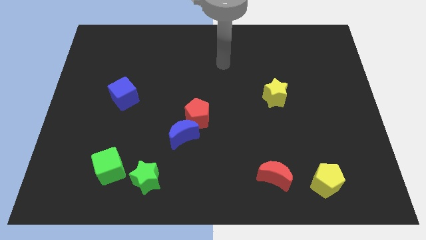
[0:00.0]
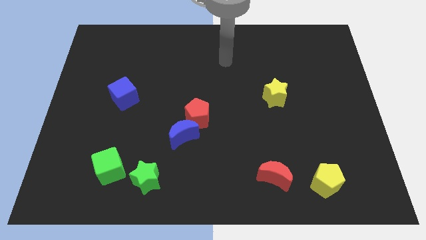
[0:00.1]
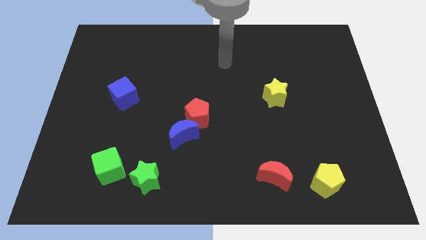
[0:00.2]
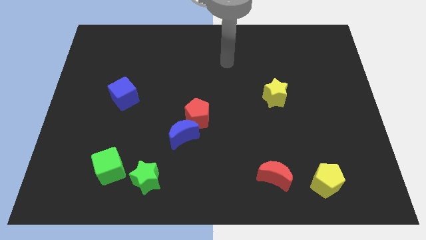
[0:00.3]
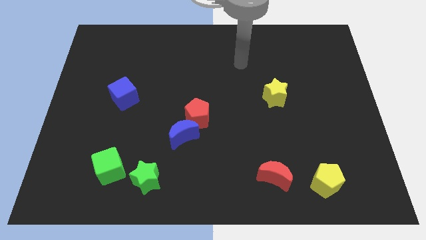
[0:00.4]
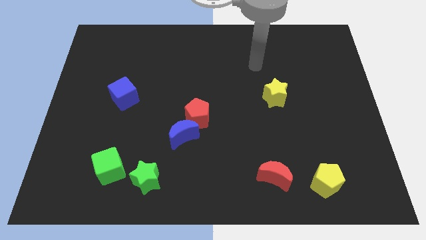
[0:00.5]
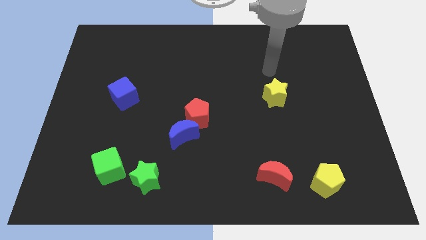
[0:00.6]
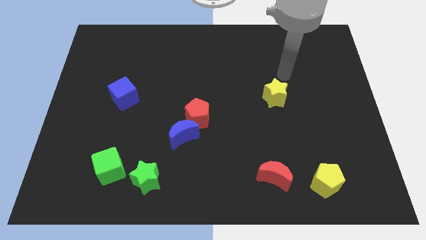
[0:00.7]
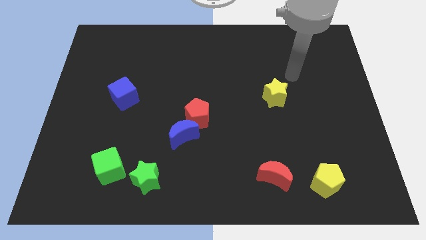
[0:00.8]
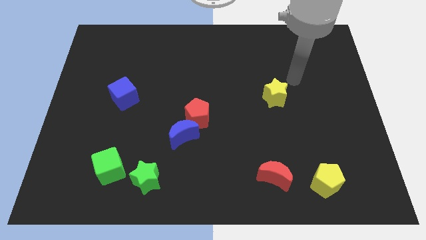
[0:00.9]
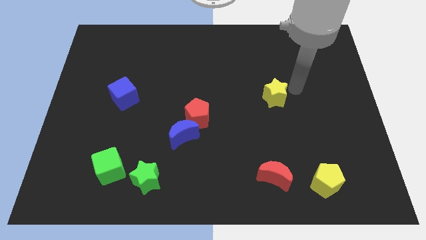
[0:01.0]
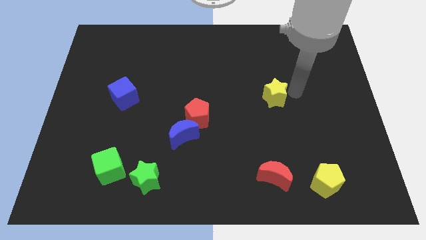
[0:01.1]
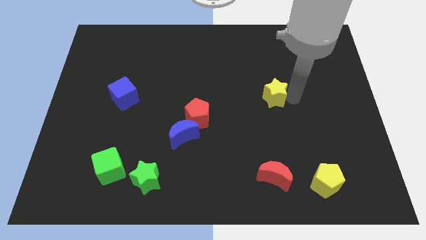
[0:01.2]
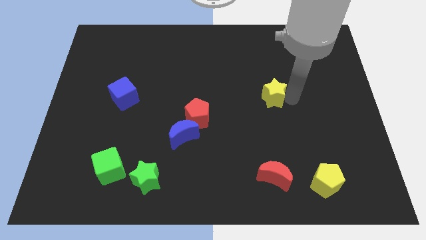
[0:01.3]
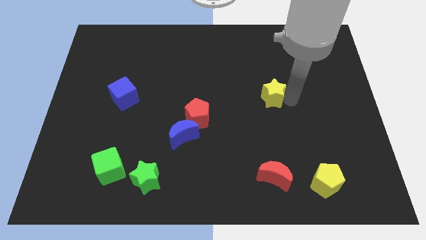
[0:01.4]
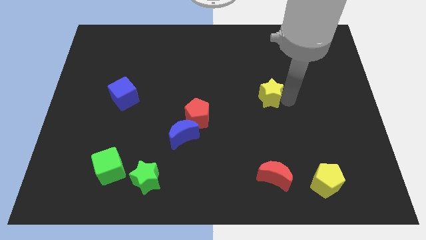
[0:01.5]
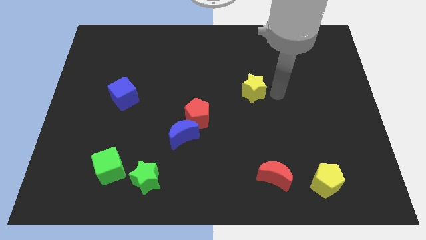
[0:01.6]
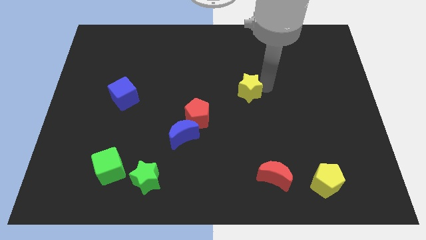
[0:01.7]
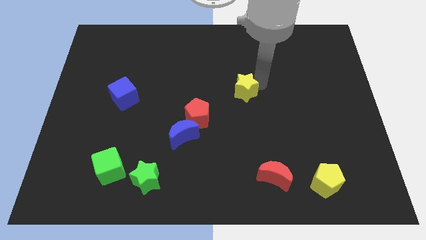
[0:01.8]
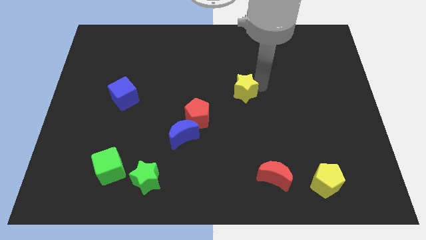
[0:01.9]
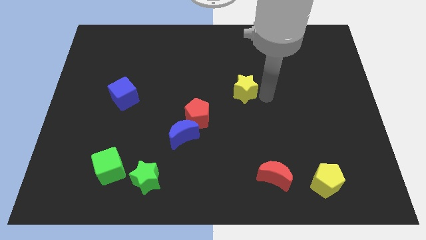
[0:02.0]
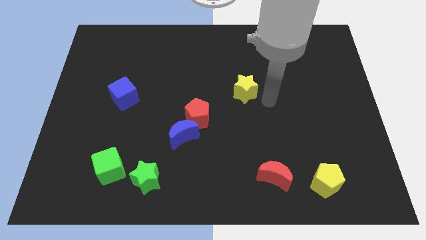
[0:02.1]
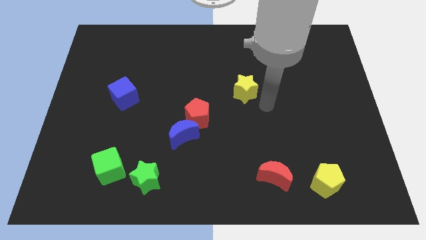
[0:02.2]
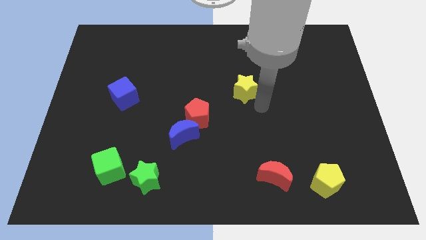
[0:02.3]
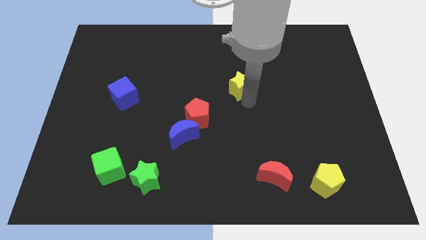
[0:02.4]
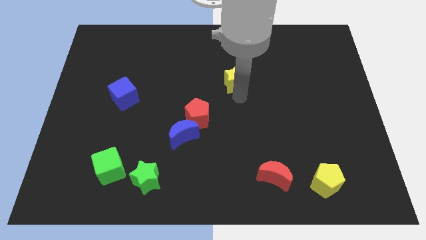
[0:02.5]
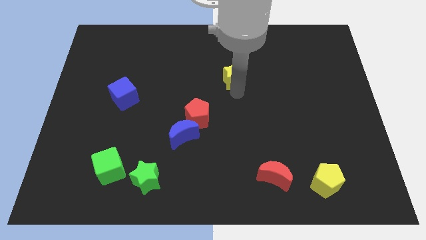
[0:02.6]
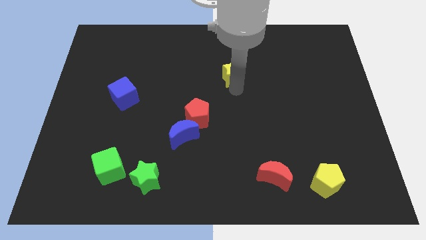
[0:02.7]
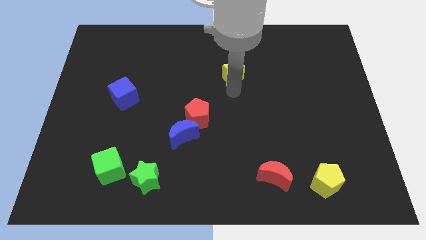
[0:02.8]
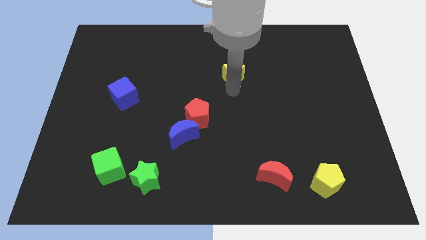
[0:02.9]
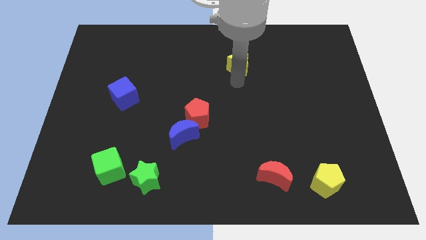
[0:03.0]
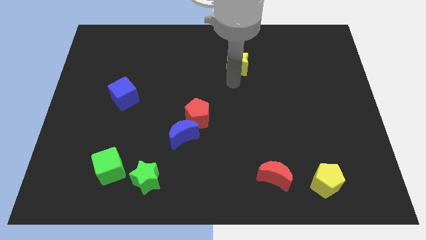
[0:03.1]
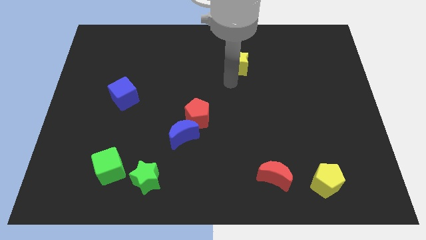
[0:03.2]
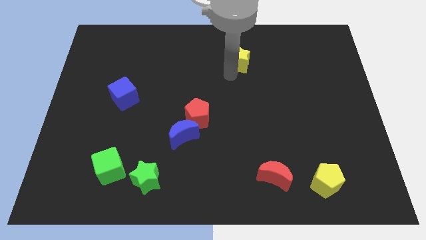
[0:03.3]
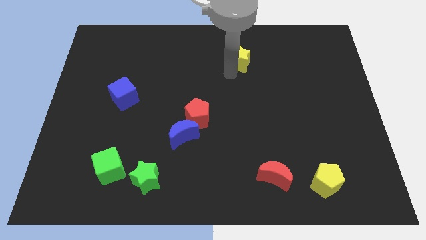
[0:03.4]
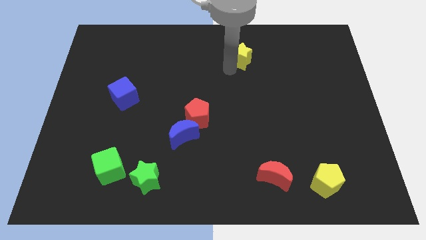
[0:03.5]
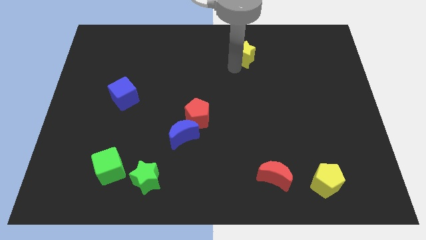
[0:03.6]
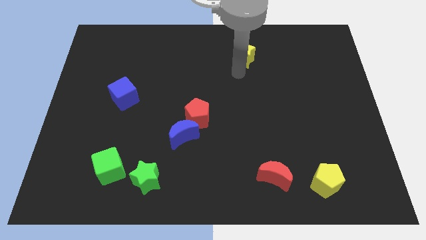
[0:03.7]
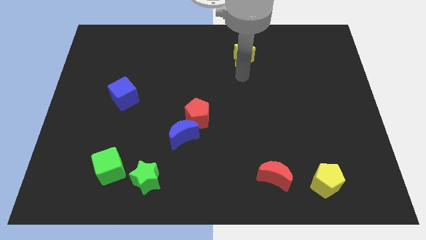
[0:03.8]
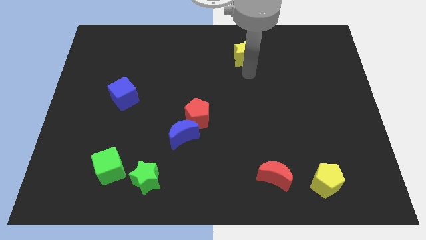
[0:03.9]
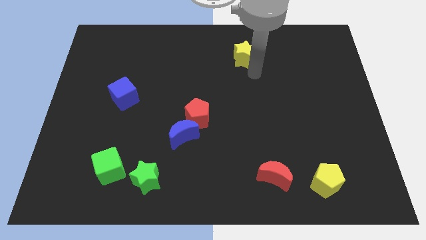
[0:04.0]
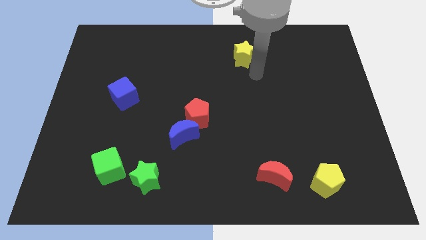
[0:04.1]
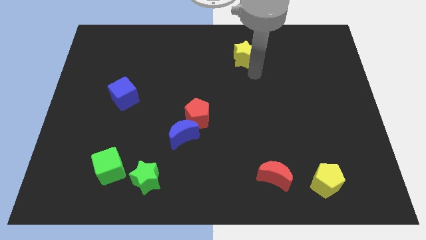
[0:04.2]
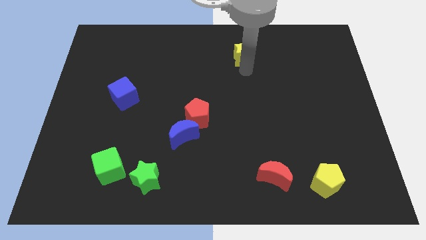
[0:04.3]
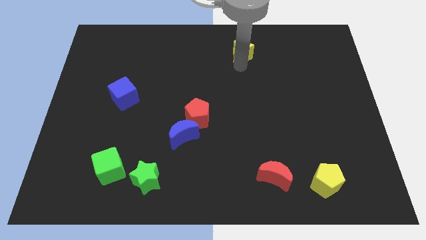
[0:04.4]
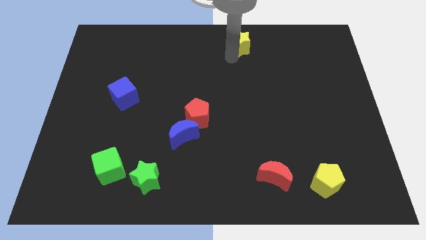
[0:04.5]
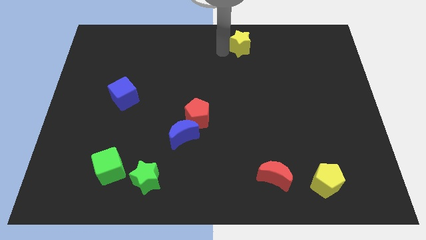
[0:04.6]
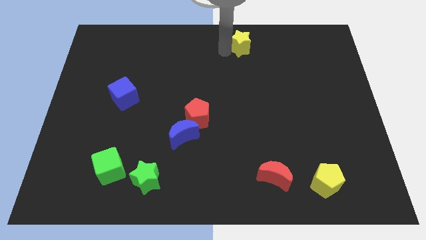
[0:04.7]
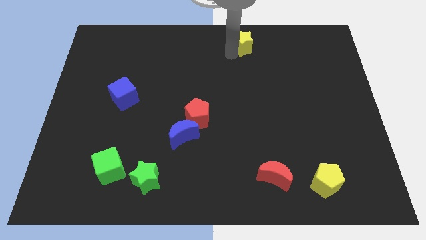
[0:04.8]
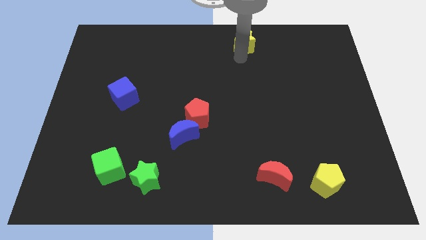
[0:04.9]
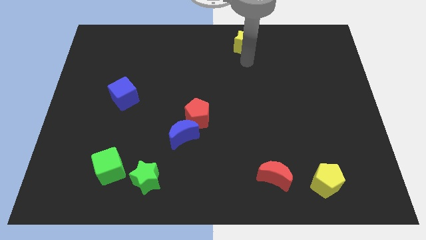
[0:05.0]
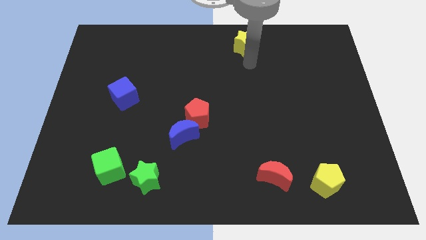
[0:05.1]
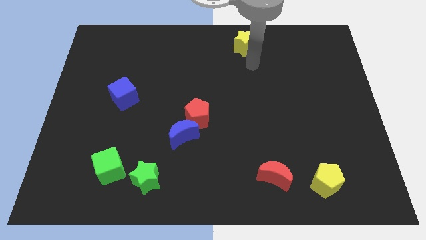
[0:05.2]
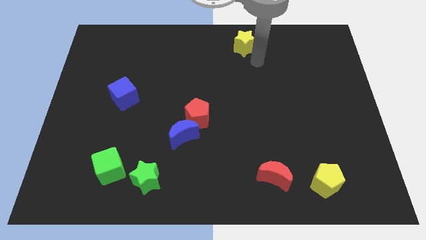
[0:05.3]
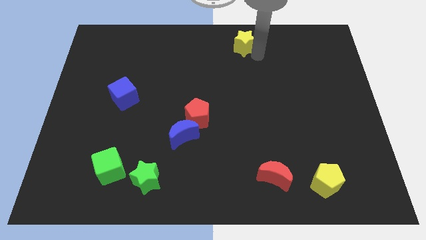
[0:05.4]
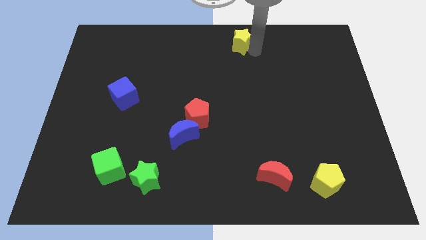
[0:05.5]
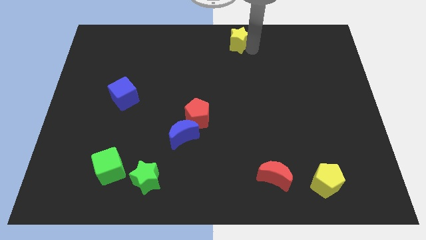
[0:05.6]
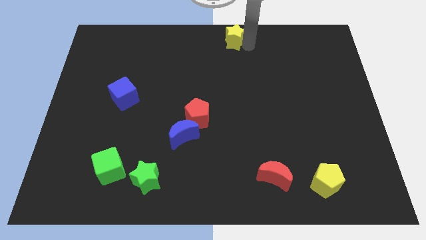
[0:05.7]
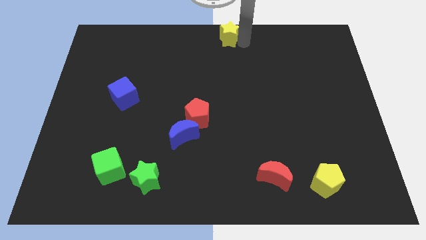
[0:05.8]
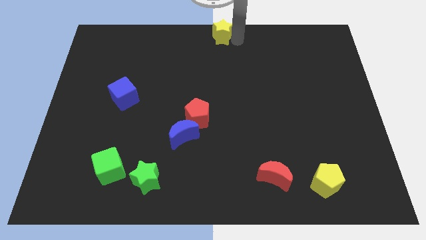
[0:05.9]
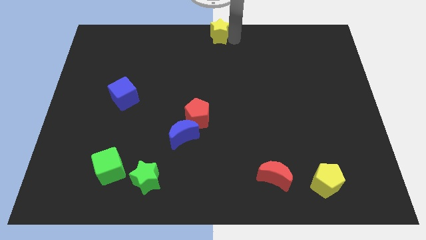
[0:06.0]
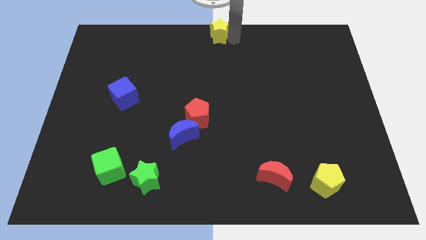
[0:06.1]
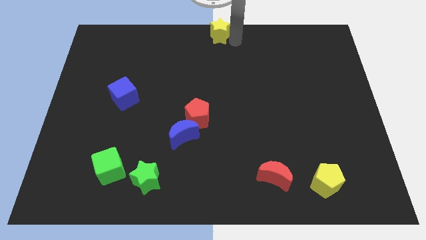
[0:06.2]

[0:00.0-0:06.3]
move yellow star to the top center of the board

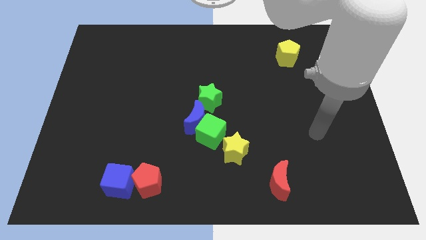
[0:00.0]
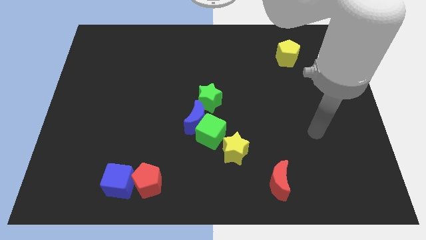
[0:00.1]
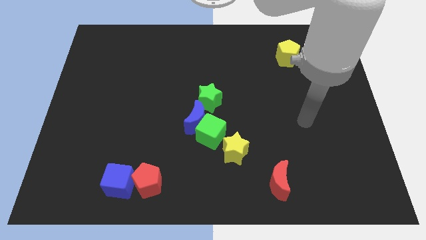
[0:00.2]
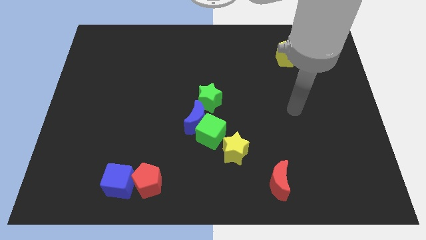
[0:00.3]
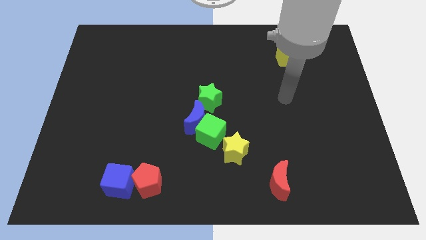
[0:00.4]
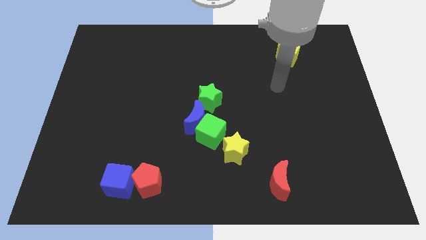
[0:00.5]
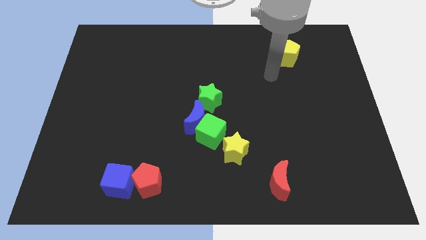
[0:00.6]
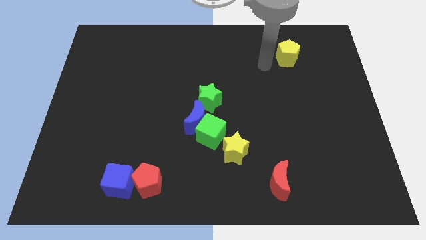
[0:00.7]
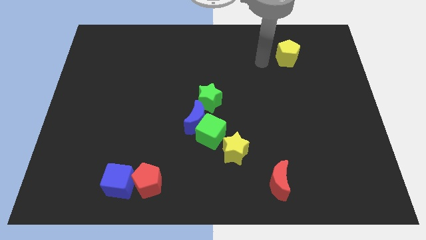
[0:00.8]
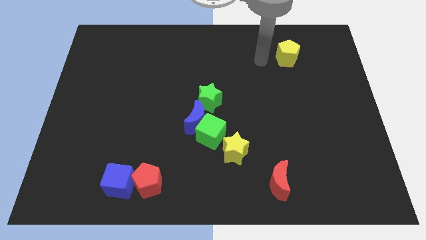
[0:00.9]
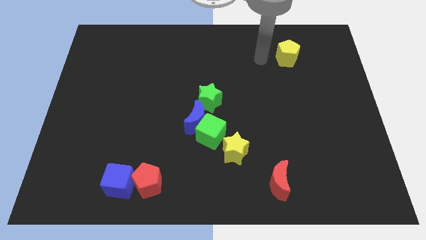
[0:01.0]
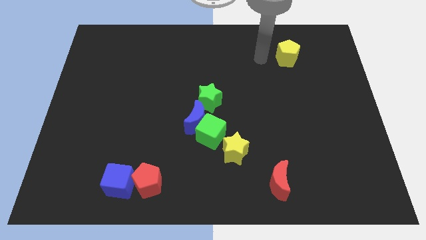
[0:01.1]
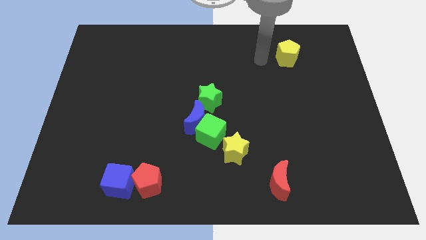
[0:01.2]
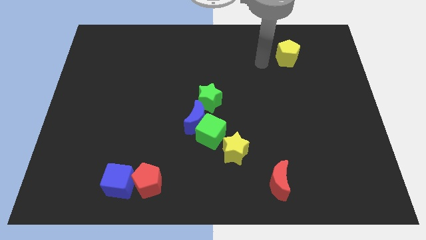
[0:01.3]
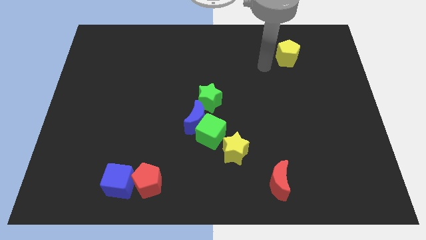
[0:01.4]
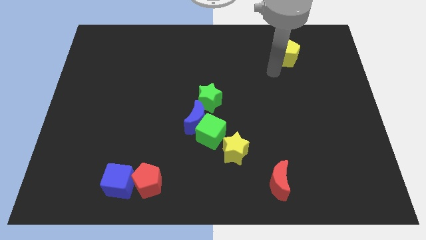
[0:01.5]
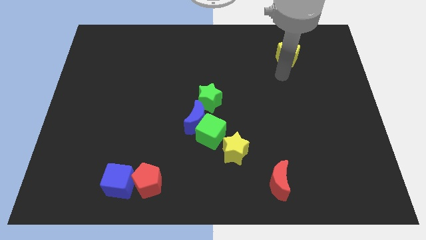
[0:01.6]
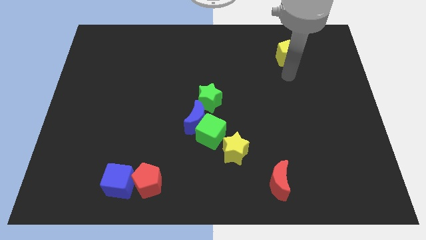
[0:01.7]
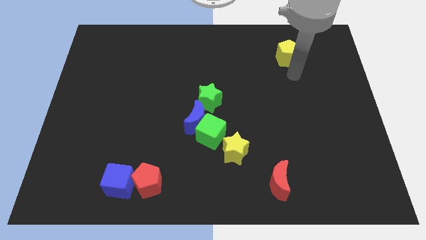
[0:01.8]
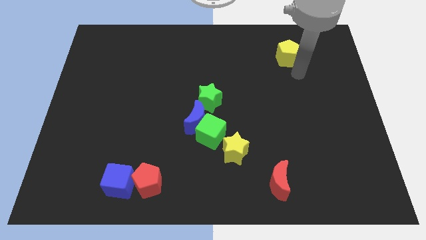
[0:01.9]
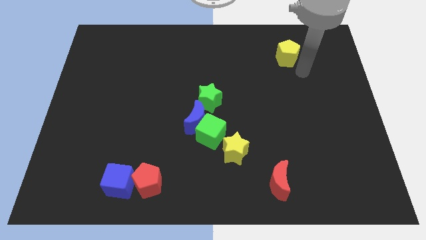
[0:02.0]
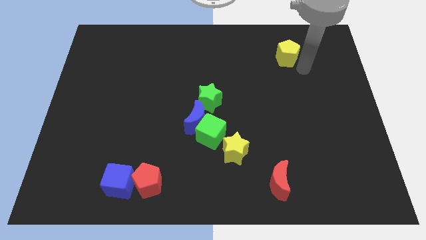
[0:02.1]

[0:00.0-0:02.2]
place the arm near the yellow pentagon

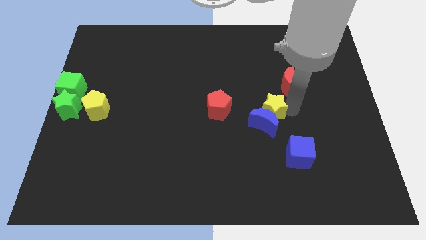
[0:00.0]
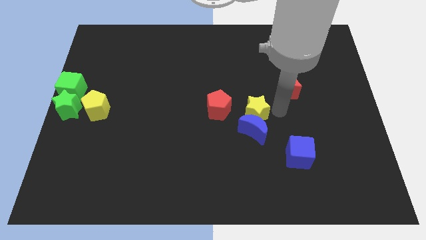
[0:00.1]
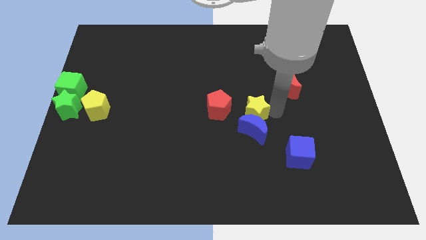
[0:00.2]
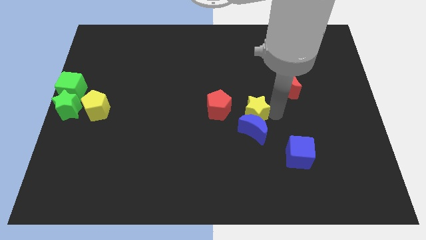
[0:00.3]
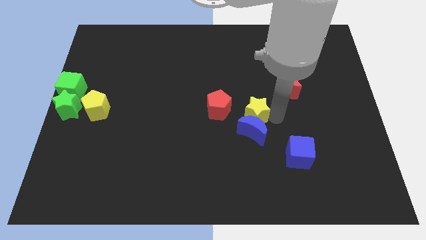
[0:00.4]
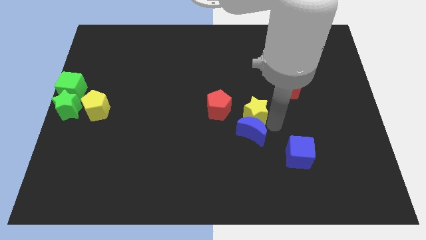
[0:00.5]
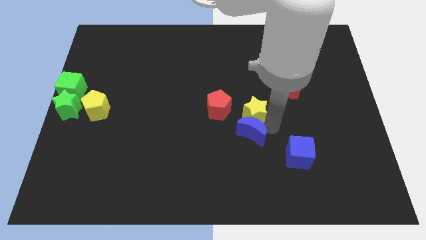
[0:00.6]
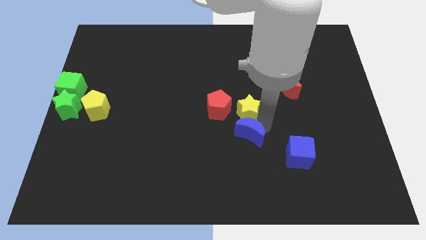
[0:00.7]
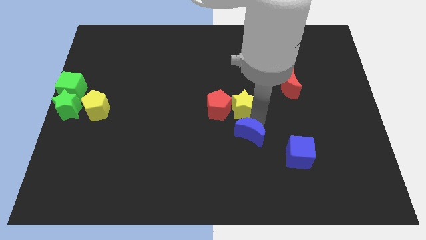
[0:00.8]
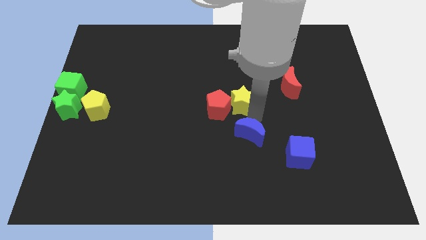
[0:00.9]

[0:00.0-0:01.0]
push yellow star into red pentagon
